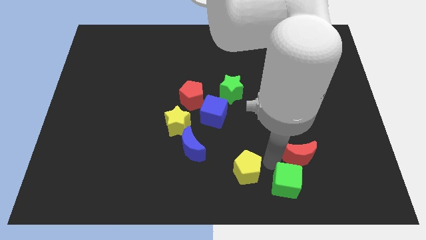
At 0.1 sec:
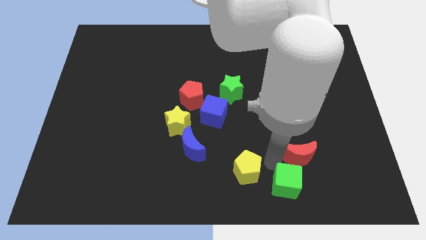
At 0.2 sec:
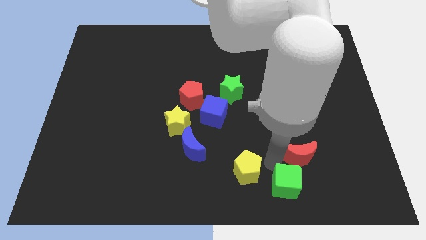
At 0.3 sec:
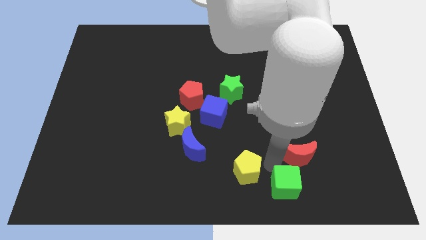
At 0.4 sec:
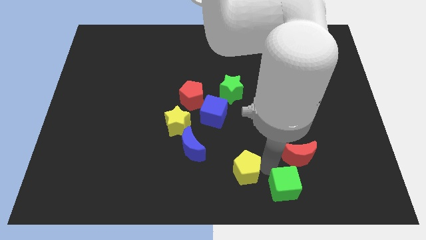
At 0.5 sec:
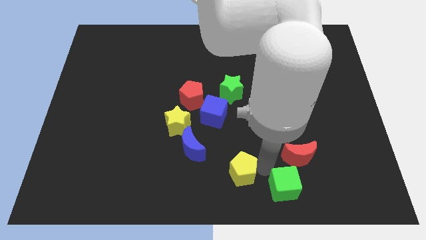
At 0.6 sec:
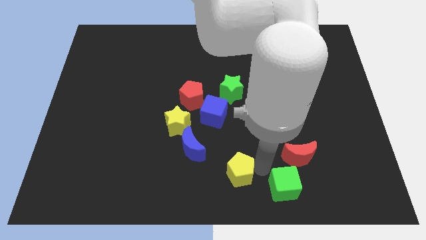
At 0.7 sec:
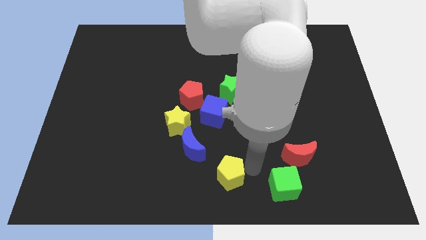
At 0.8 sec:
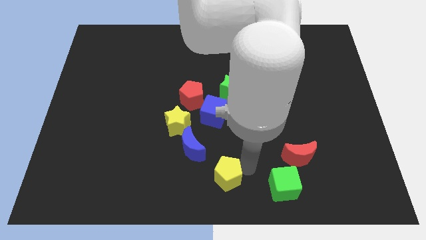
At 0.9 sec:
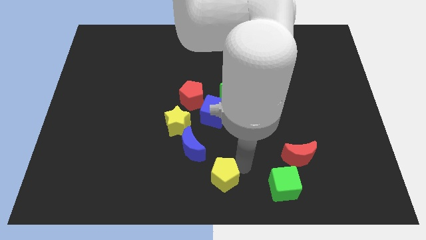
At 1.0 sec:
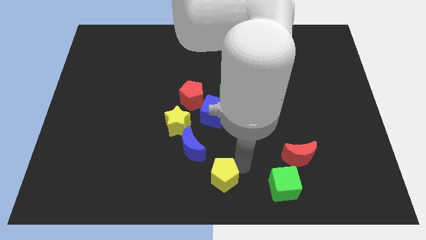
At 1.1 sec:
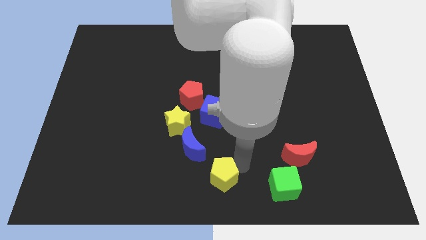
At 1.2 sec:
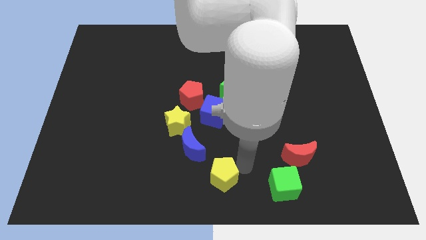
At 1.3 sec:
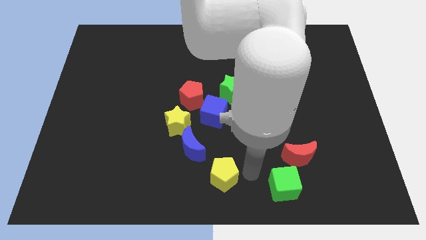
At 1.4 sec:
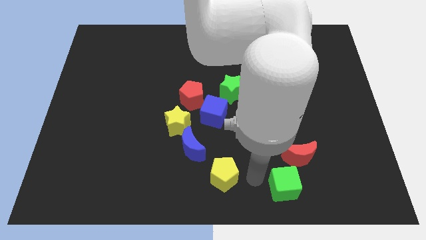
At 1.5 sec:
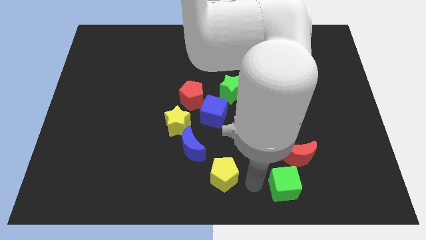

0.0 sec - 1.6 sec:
place the yellow pentagon to the bottom middle of the board

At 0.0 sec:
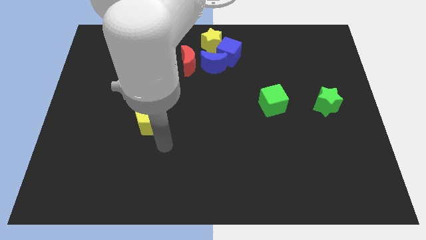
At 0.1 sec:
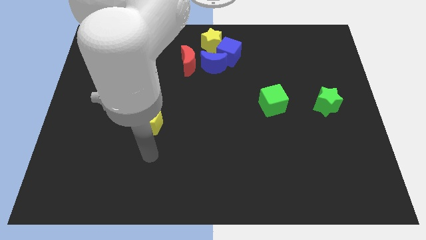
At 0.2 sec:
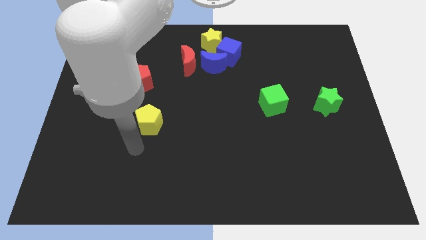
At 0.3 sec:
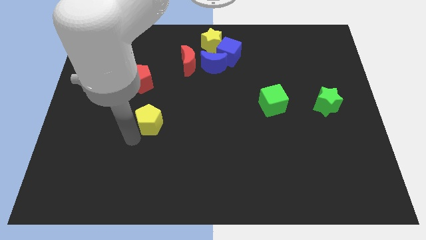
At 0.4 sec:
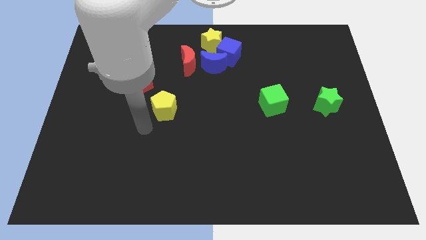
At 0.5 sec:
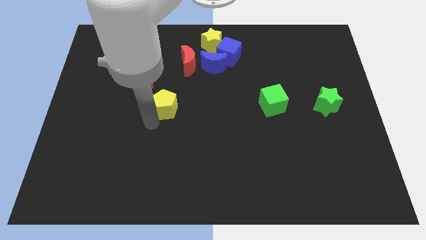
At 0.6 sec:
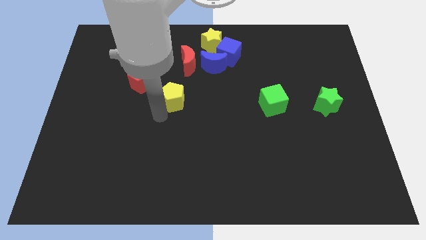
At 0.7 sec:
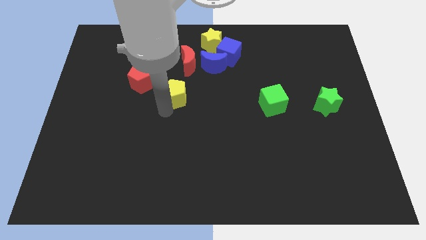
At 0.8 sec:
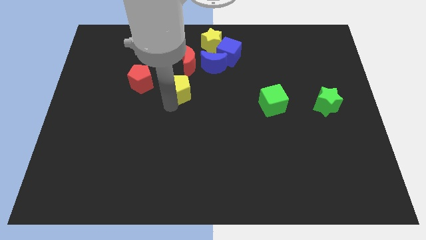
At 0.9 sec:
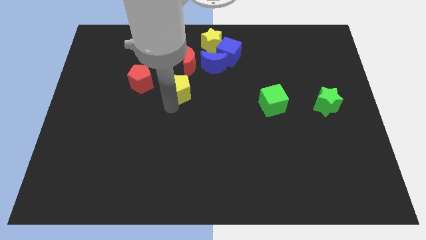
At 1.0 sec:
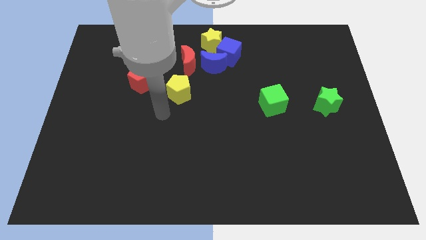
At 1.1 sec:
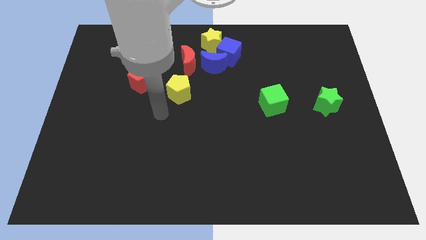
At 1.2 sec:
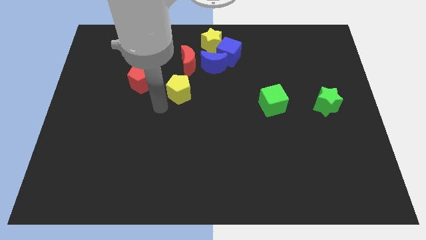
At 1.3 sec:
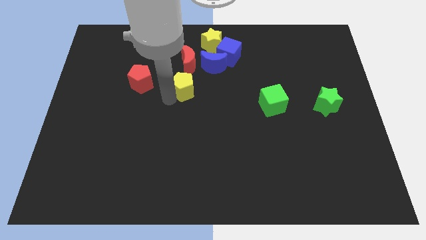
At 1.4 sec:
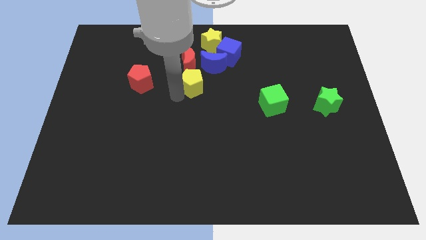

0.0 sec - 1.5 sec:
move the yellow pentagon to the bottom of the red crescent

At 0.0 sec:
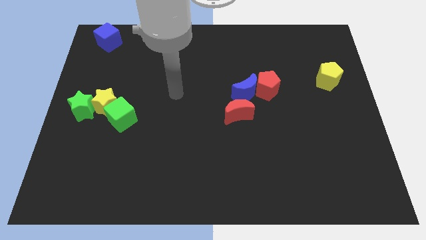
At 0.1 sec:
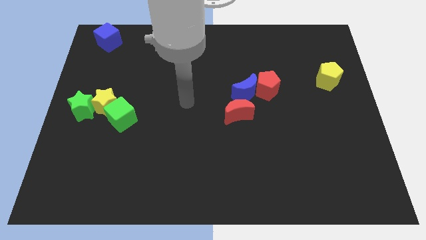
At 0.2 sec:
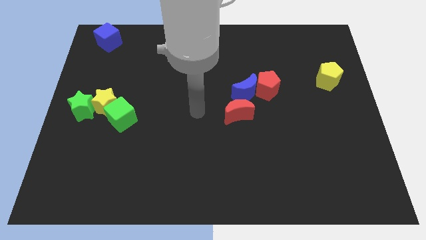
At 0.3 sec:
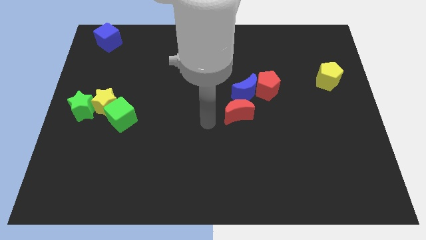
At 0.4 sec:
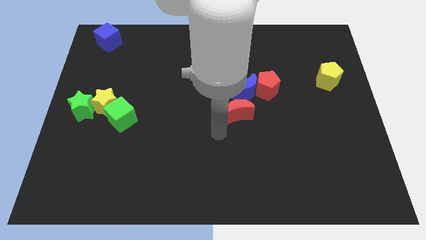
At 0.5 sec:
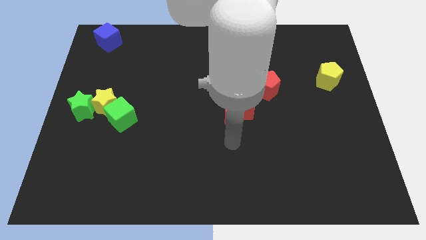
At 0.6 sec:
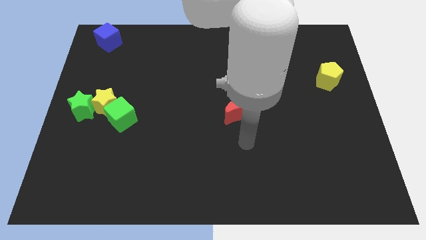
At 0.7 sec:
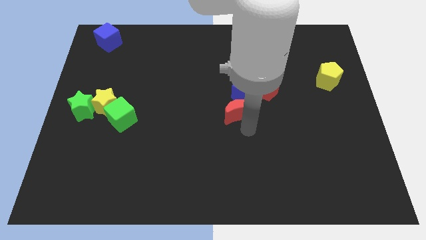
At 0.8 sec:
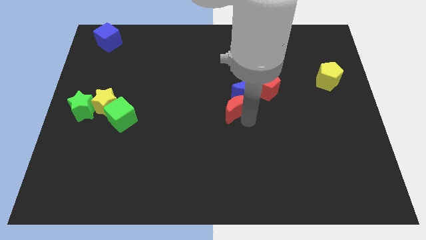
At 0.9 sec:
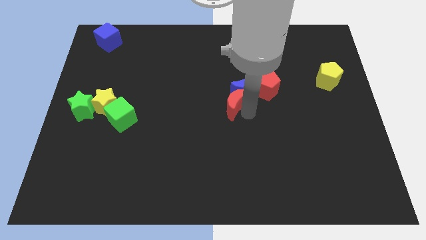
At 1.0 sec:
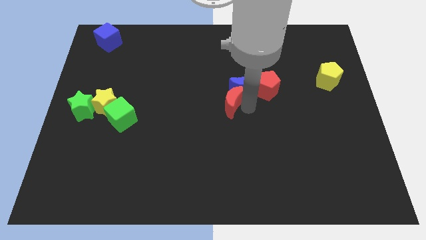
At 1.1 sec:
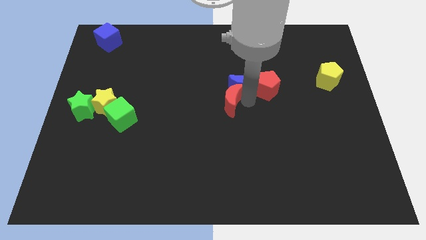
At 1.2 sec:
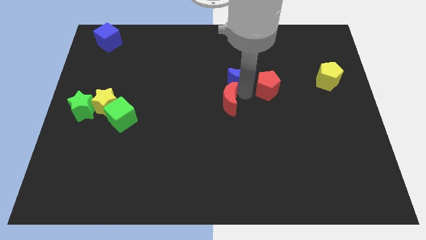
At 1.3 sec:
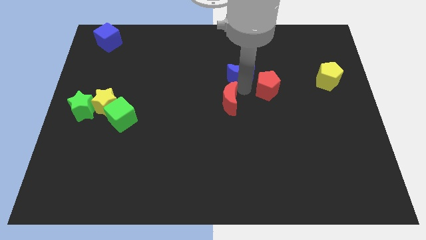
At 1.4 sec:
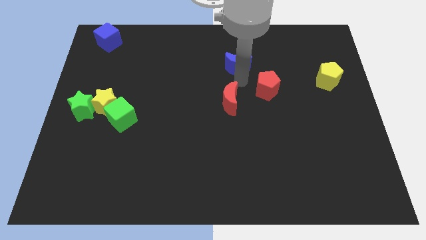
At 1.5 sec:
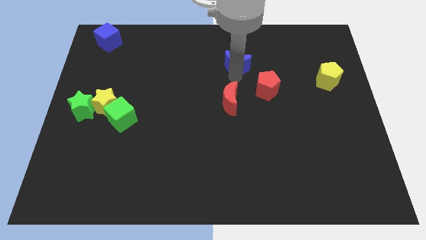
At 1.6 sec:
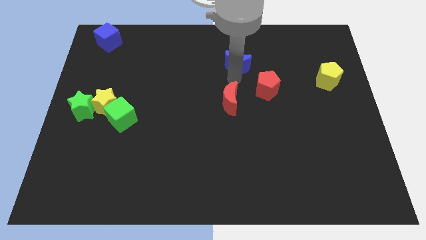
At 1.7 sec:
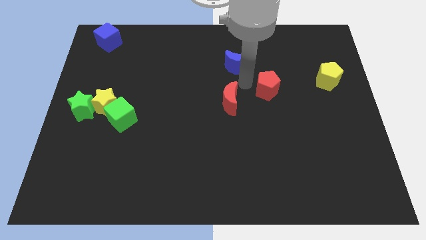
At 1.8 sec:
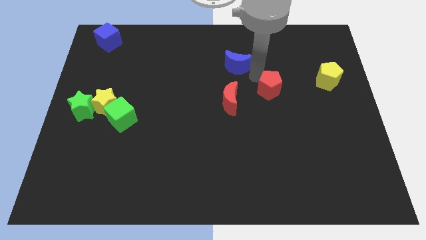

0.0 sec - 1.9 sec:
separate the blue crescent and red crescent

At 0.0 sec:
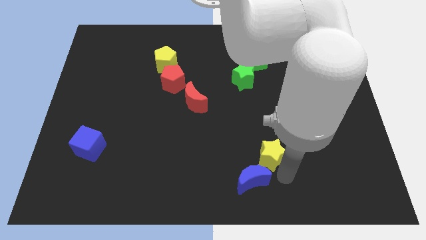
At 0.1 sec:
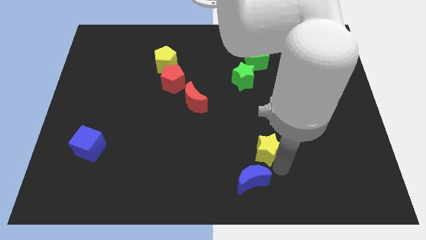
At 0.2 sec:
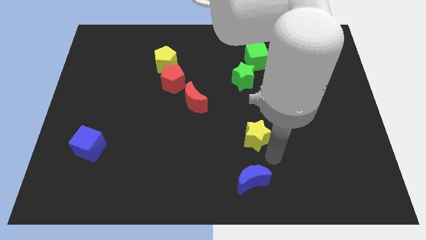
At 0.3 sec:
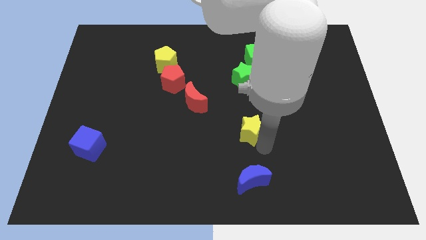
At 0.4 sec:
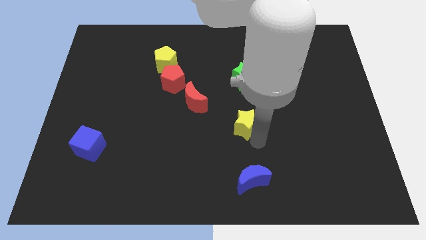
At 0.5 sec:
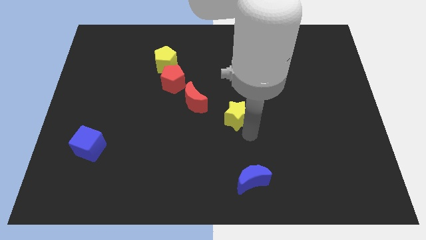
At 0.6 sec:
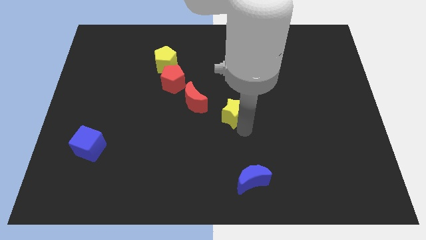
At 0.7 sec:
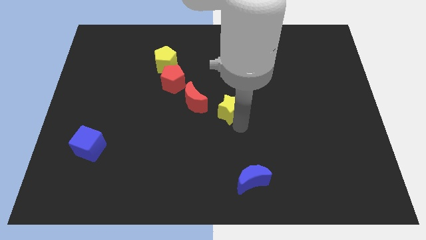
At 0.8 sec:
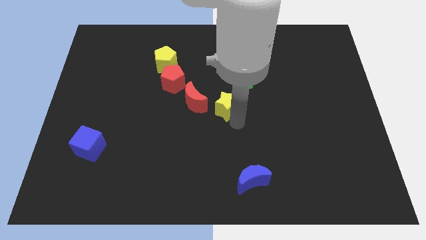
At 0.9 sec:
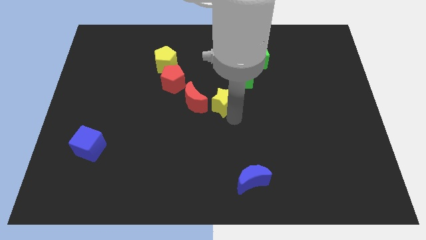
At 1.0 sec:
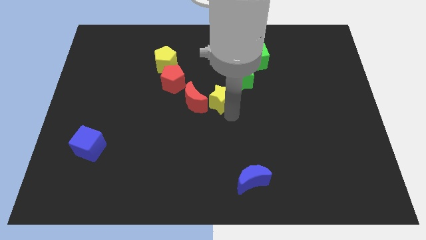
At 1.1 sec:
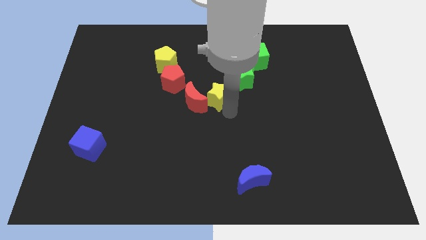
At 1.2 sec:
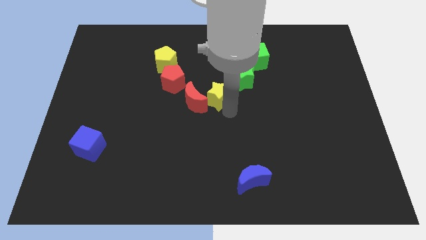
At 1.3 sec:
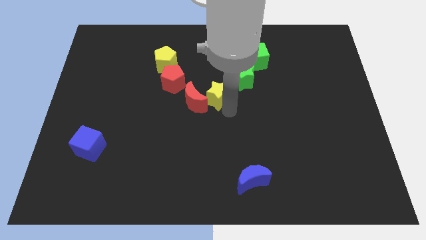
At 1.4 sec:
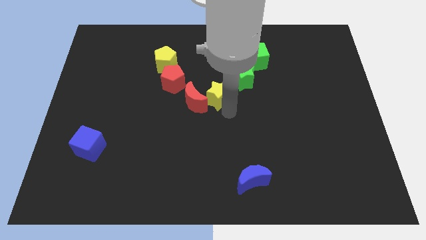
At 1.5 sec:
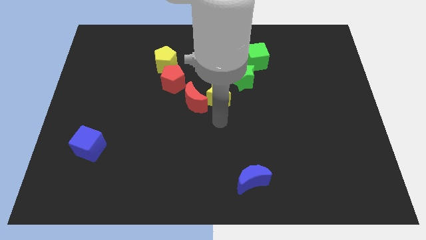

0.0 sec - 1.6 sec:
place the green star in between the red moon and the green star

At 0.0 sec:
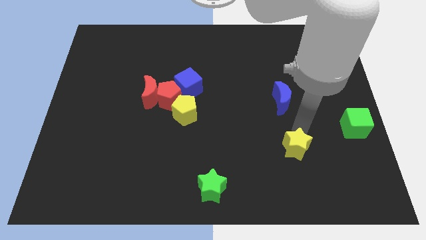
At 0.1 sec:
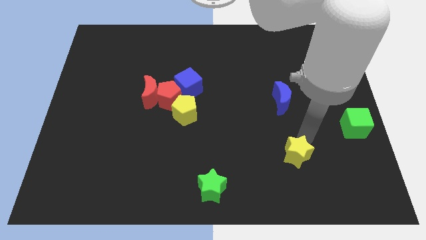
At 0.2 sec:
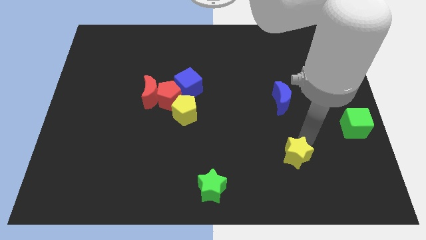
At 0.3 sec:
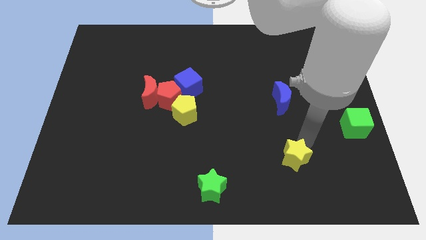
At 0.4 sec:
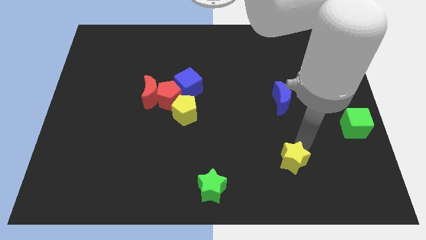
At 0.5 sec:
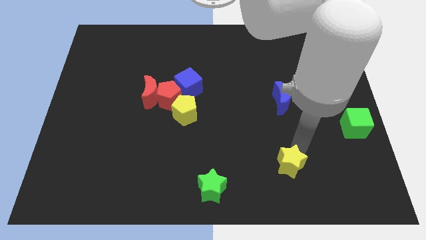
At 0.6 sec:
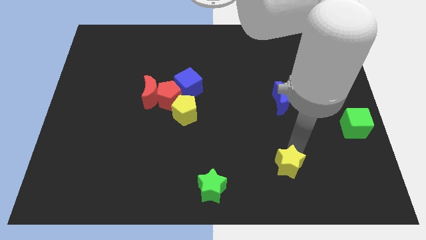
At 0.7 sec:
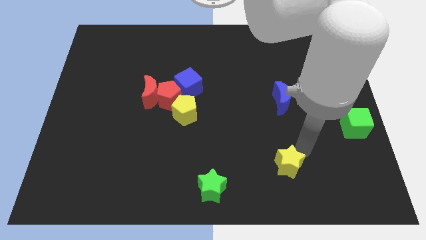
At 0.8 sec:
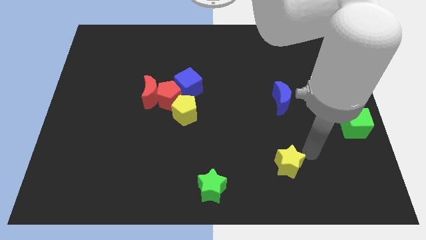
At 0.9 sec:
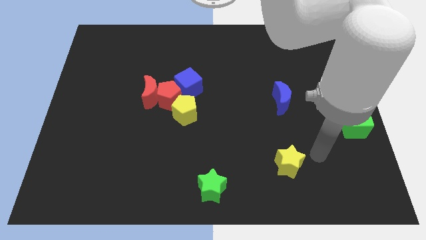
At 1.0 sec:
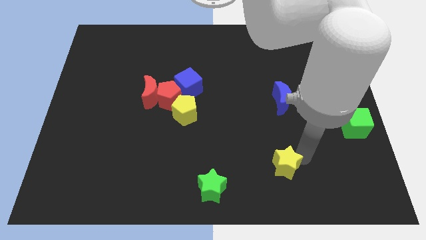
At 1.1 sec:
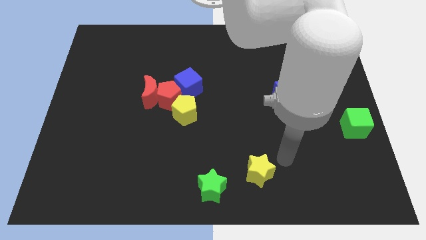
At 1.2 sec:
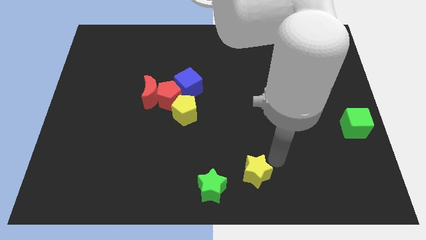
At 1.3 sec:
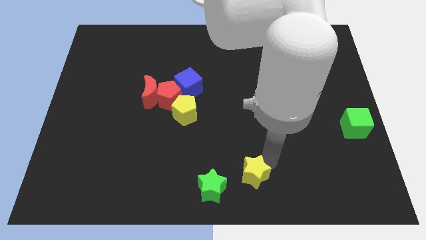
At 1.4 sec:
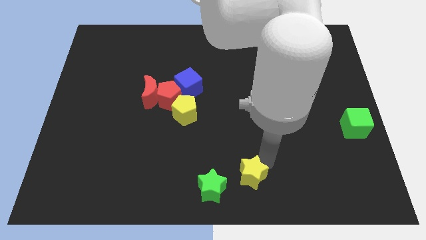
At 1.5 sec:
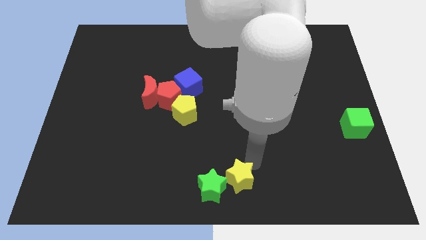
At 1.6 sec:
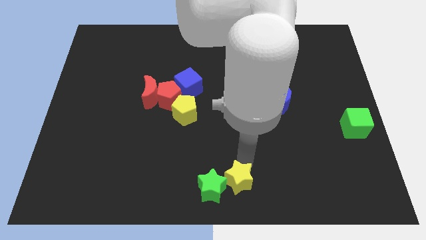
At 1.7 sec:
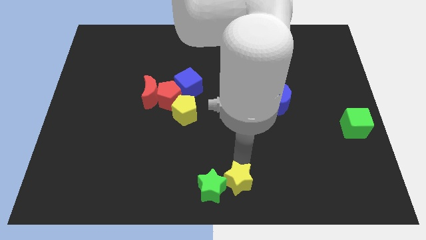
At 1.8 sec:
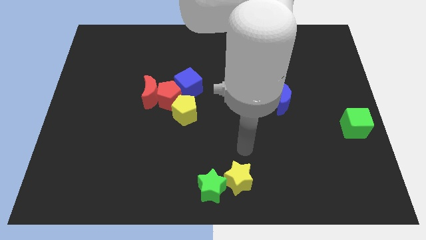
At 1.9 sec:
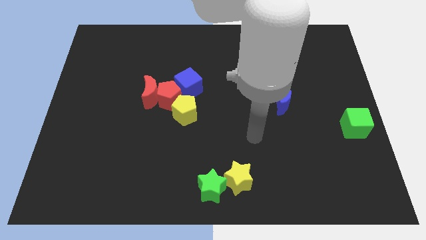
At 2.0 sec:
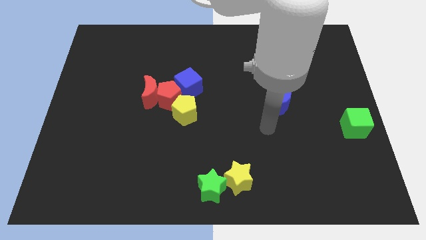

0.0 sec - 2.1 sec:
place the yellow star into green star at the bottom side

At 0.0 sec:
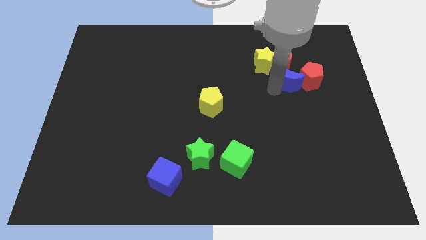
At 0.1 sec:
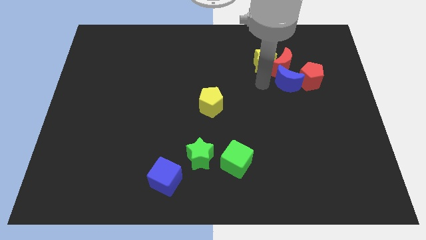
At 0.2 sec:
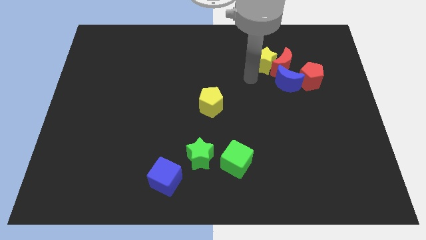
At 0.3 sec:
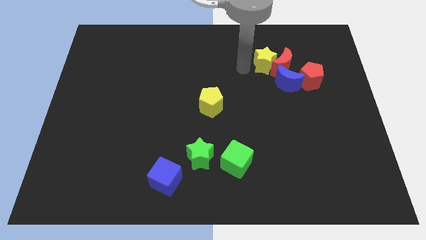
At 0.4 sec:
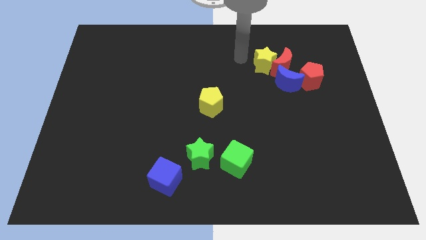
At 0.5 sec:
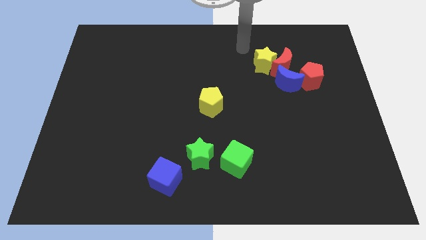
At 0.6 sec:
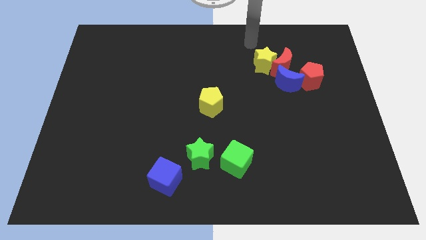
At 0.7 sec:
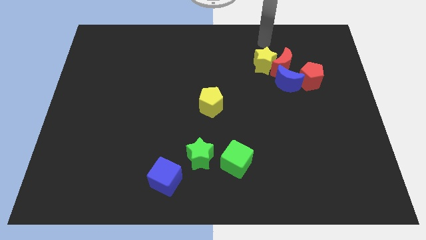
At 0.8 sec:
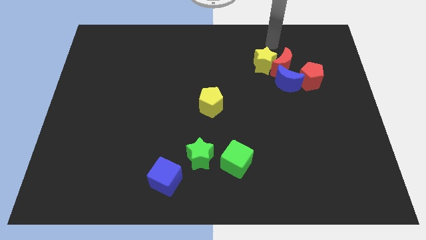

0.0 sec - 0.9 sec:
place your arm above yellow star
